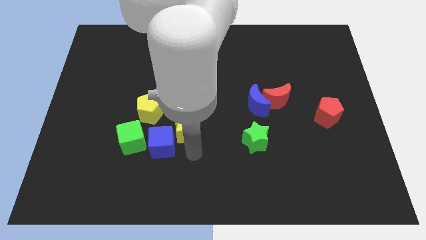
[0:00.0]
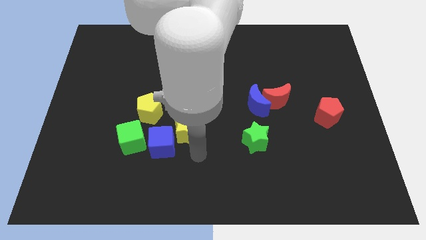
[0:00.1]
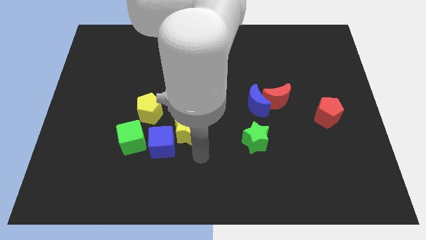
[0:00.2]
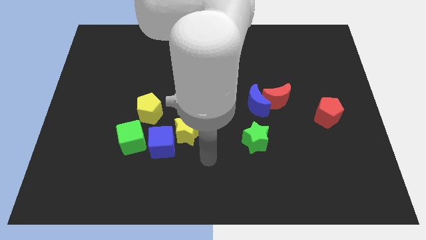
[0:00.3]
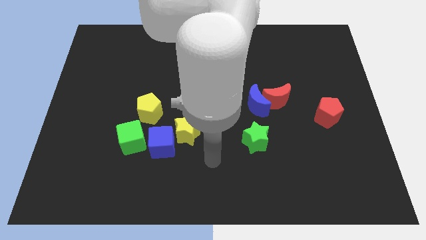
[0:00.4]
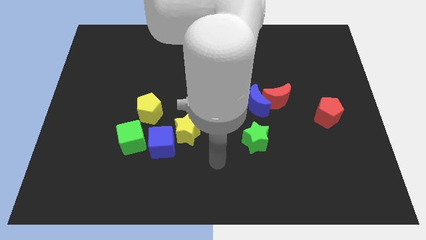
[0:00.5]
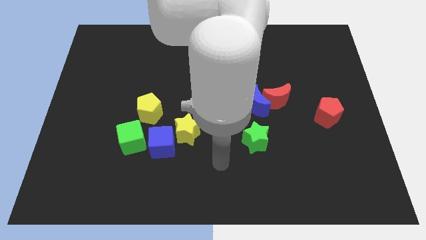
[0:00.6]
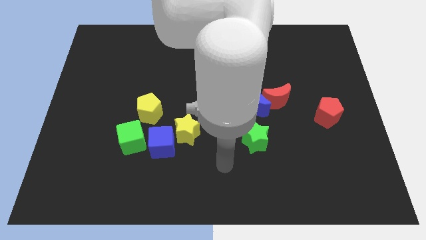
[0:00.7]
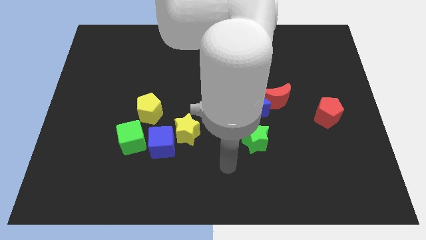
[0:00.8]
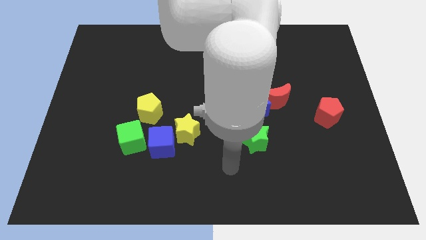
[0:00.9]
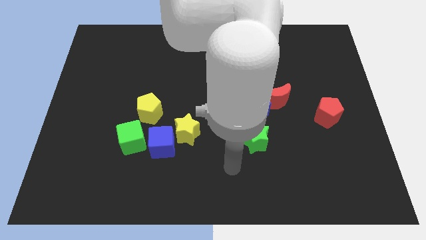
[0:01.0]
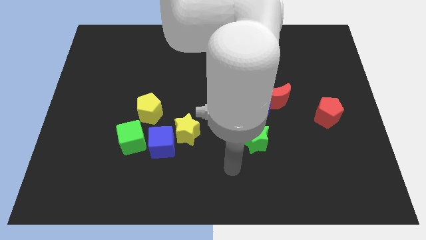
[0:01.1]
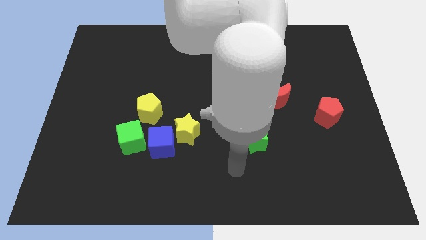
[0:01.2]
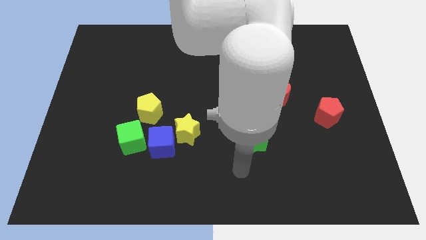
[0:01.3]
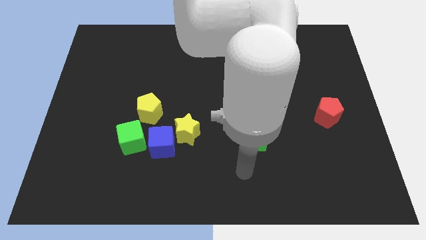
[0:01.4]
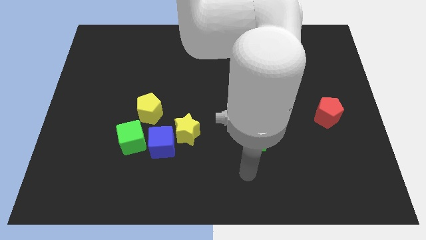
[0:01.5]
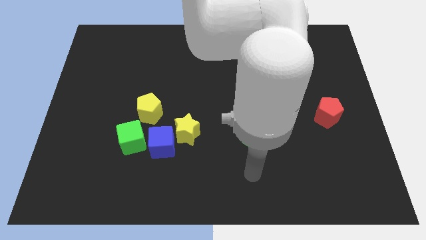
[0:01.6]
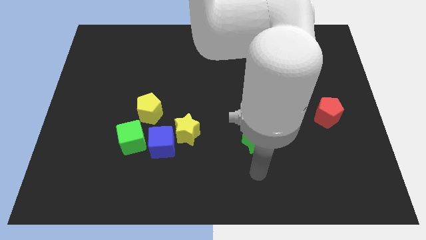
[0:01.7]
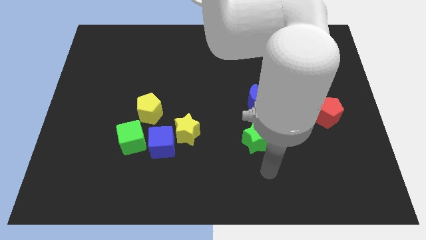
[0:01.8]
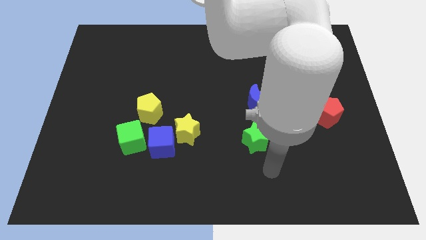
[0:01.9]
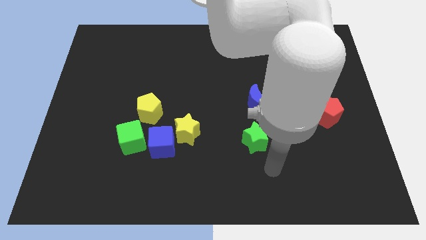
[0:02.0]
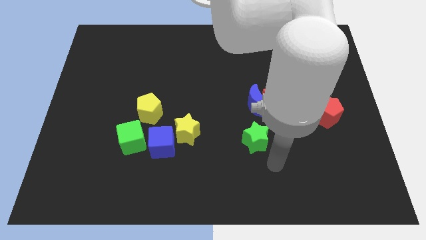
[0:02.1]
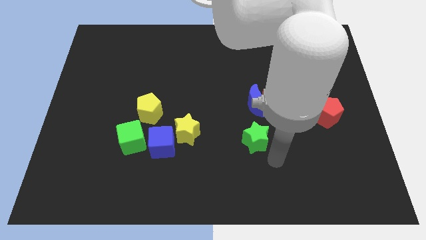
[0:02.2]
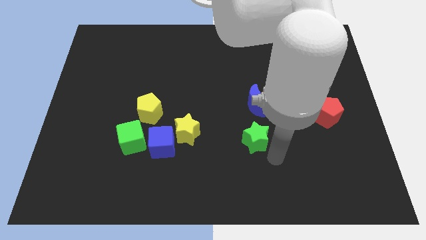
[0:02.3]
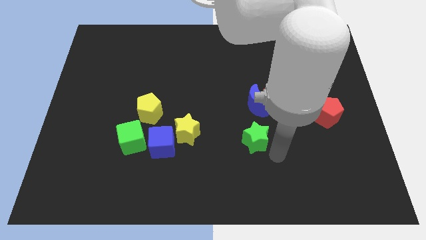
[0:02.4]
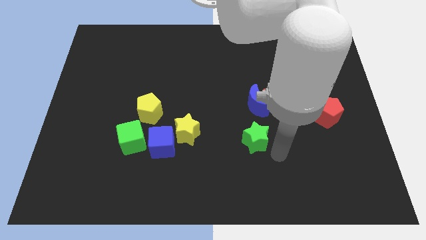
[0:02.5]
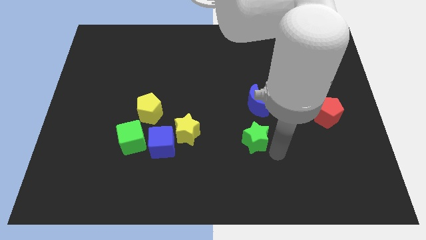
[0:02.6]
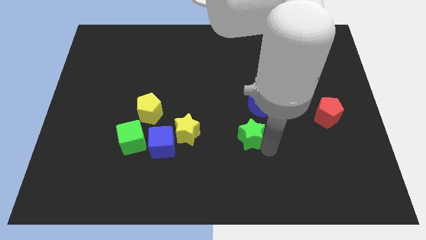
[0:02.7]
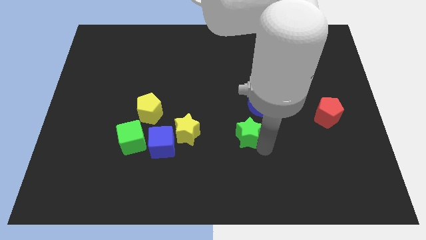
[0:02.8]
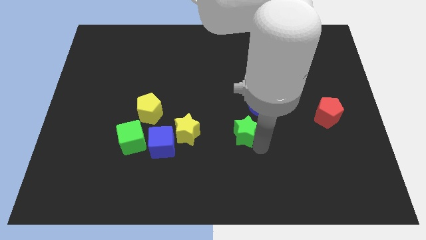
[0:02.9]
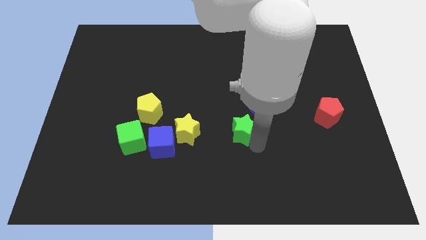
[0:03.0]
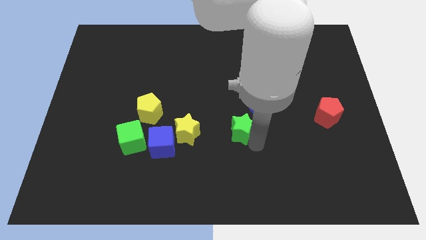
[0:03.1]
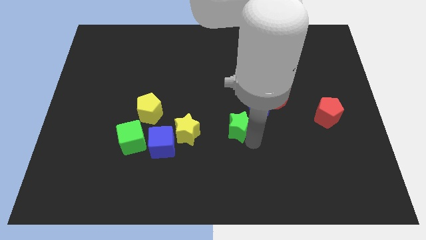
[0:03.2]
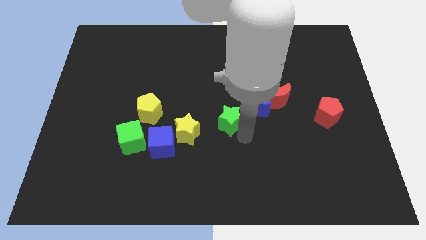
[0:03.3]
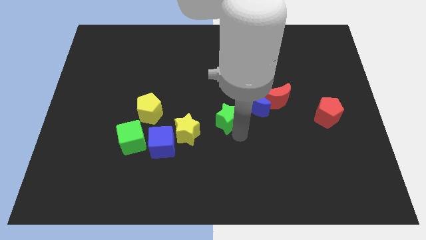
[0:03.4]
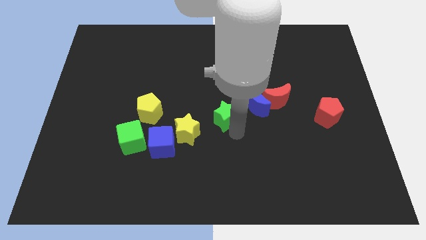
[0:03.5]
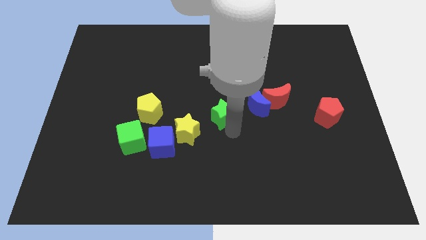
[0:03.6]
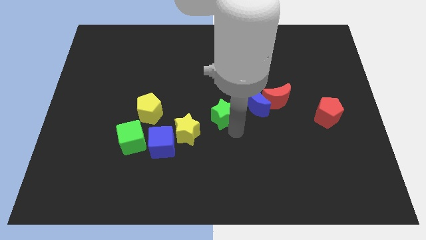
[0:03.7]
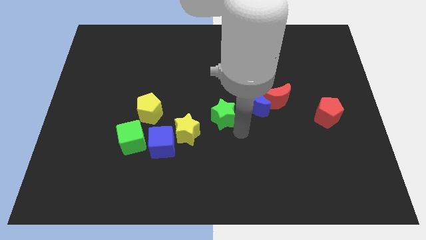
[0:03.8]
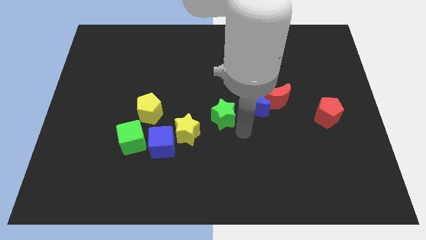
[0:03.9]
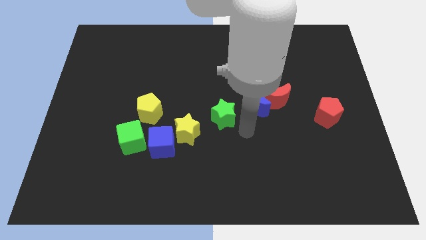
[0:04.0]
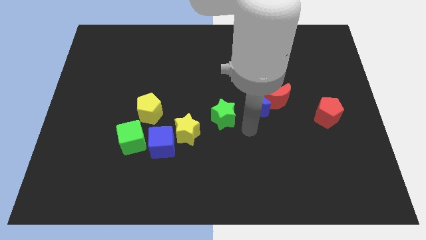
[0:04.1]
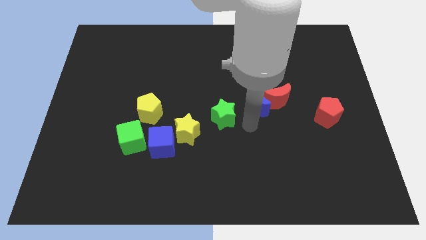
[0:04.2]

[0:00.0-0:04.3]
put the green star between the yellow star and blue moon

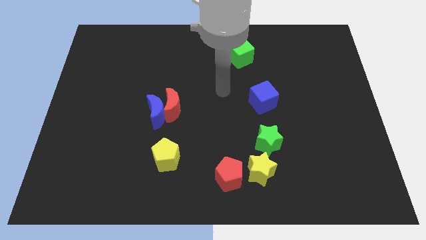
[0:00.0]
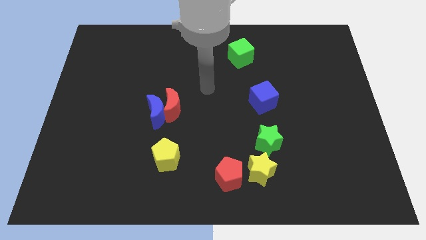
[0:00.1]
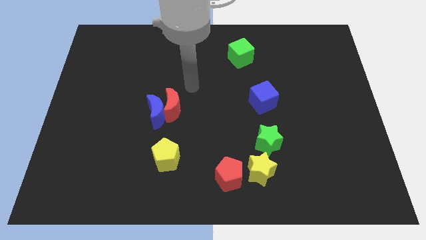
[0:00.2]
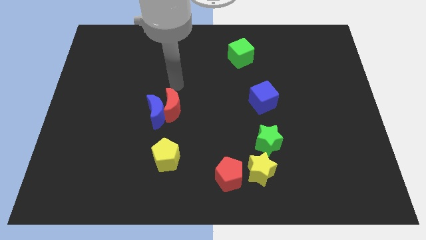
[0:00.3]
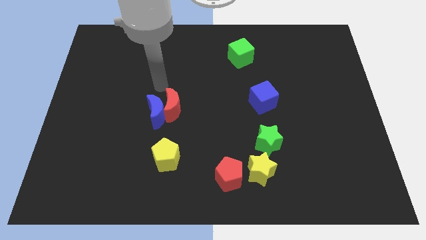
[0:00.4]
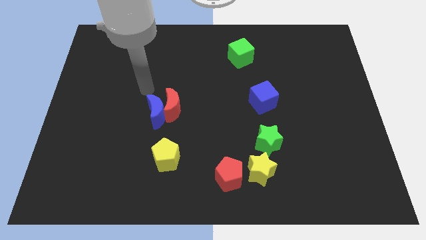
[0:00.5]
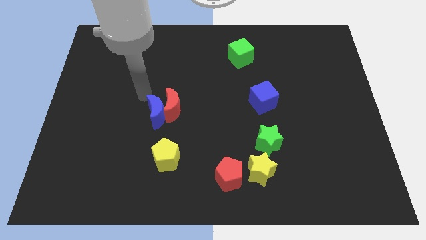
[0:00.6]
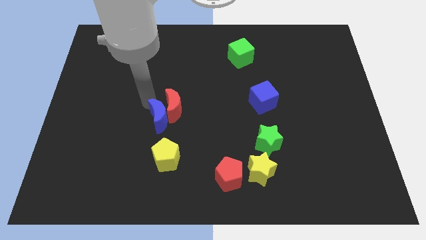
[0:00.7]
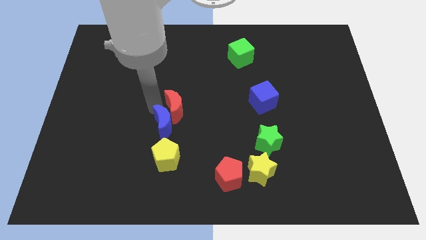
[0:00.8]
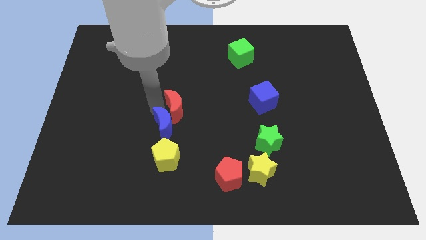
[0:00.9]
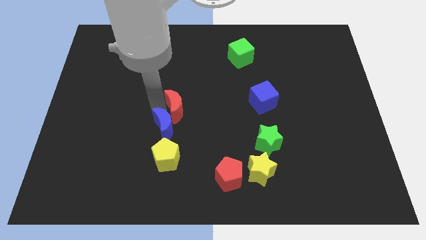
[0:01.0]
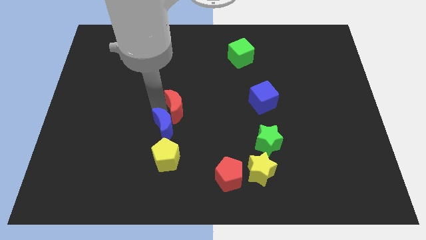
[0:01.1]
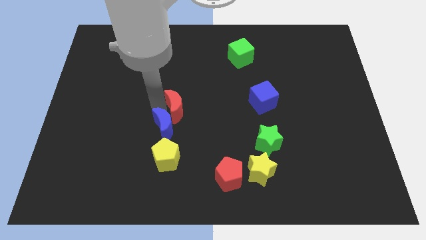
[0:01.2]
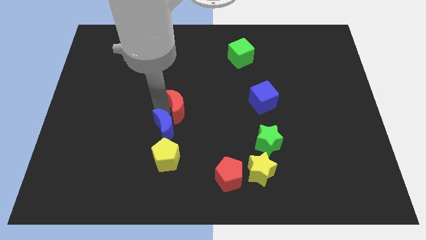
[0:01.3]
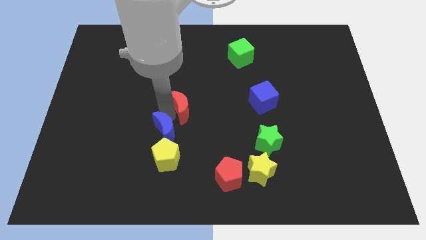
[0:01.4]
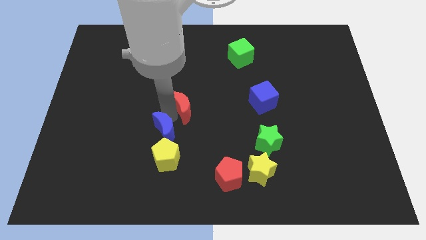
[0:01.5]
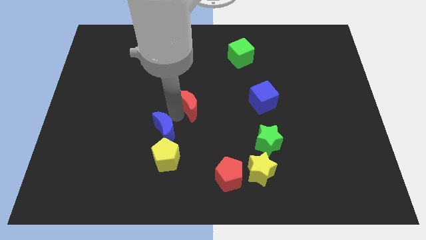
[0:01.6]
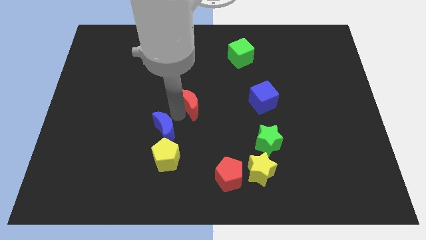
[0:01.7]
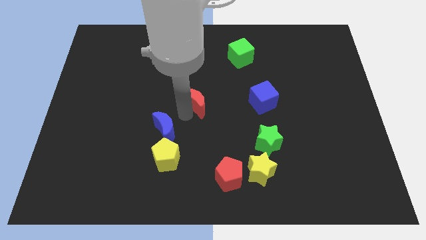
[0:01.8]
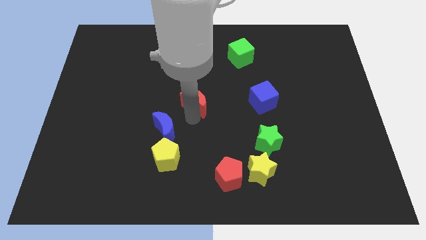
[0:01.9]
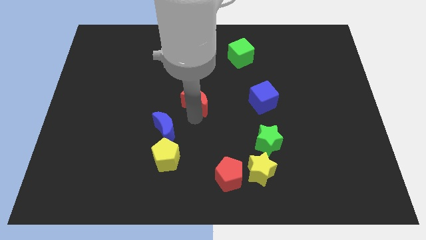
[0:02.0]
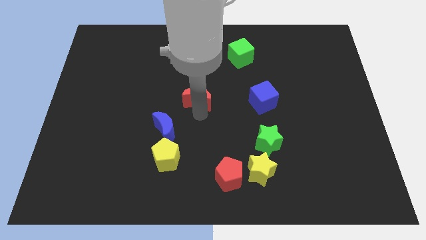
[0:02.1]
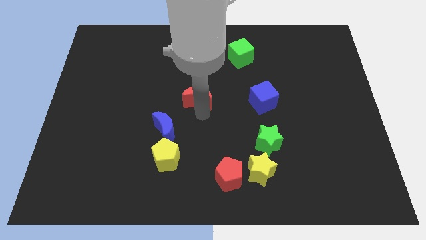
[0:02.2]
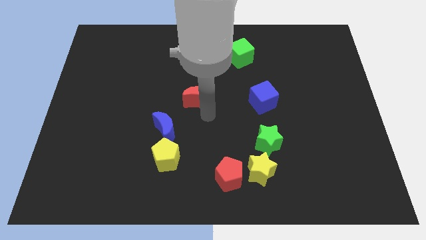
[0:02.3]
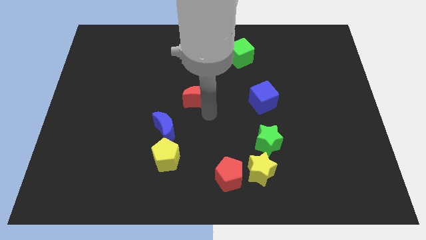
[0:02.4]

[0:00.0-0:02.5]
separate the red crescent from the blue crescent

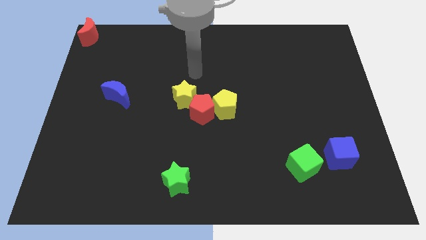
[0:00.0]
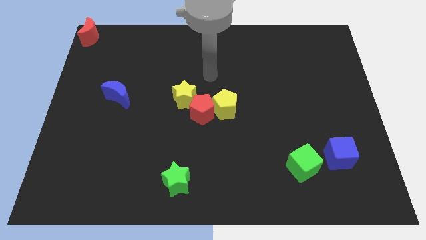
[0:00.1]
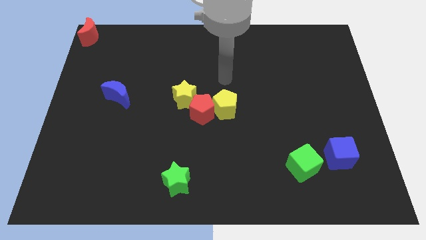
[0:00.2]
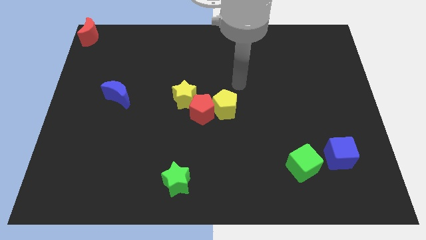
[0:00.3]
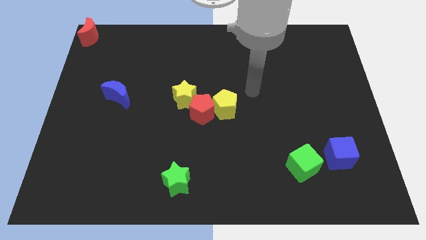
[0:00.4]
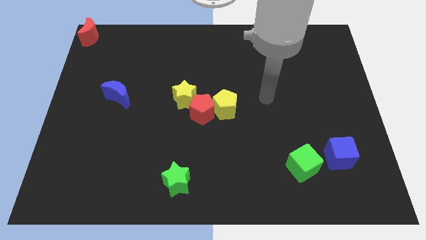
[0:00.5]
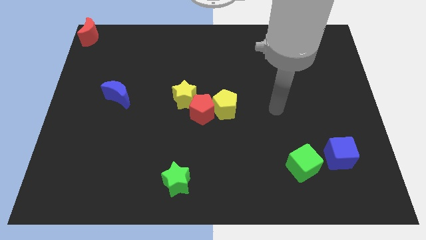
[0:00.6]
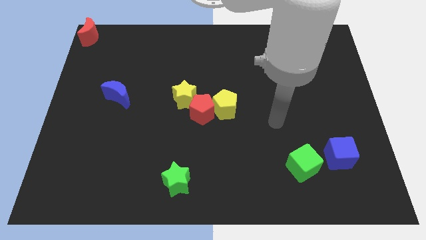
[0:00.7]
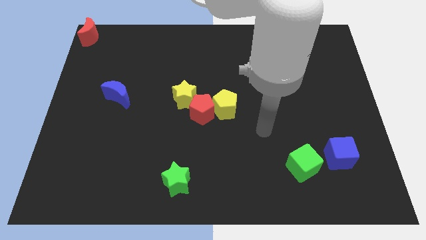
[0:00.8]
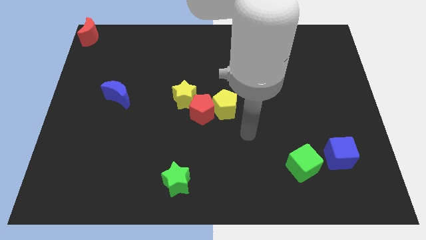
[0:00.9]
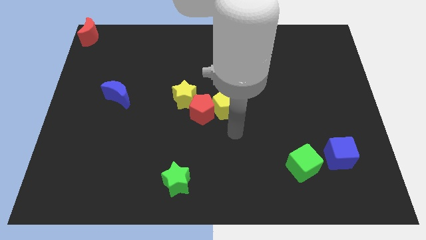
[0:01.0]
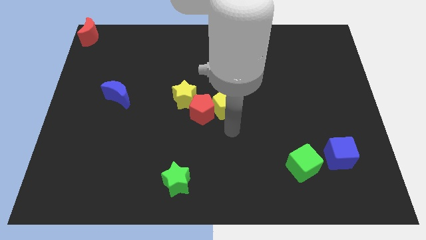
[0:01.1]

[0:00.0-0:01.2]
point your arm at the bottom of yellow pentagon

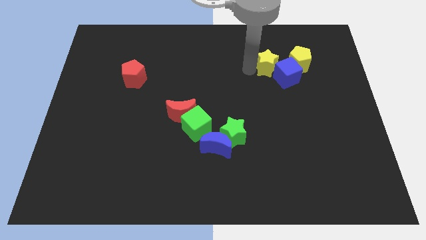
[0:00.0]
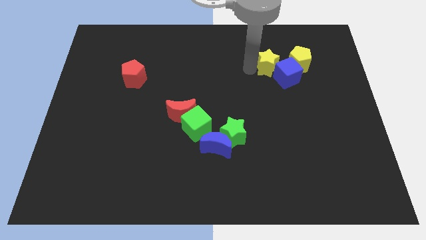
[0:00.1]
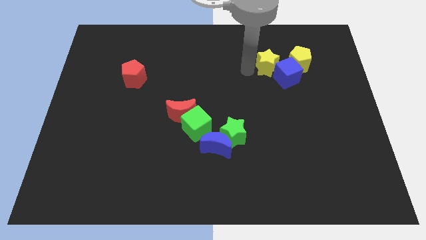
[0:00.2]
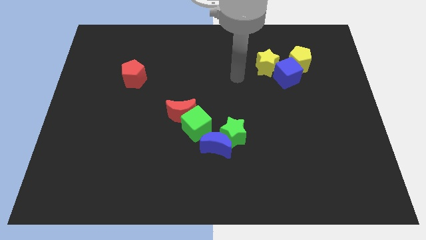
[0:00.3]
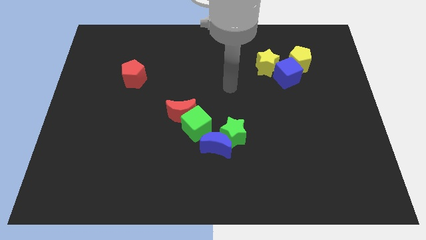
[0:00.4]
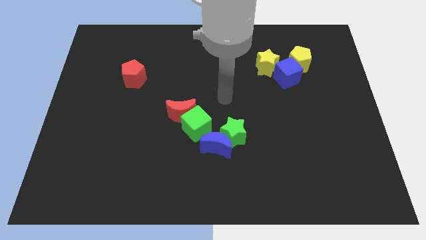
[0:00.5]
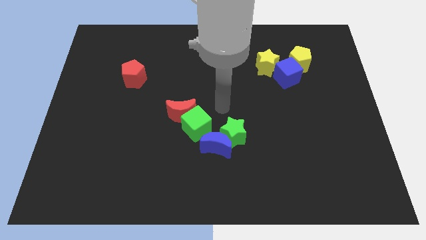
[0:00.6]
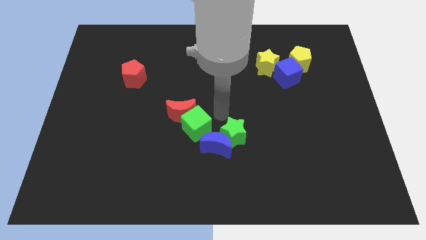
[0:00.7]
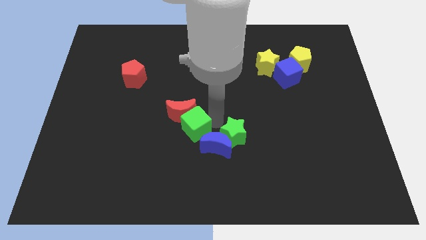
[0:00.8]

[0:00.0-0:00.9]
move the arm right to the green cube
